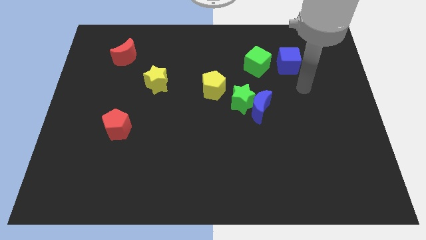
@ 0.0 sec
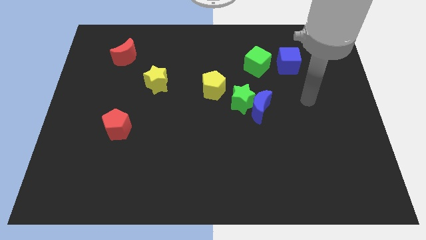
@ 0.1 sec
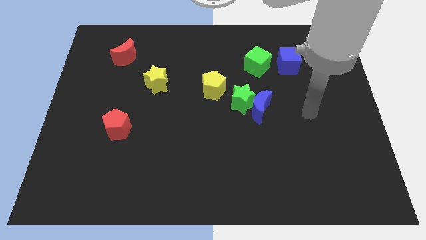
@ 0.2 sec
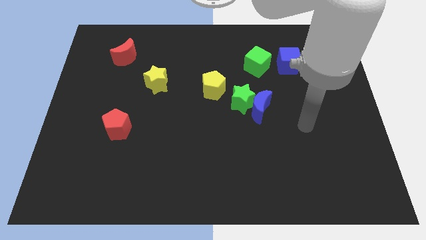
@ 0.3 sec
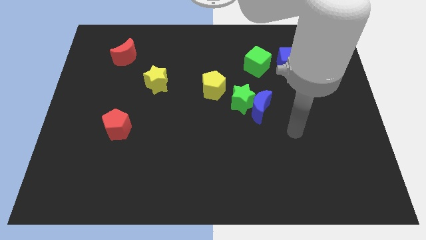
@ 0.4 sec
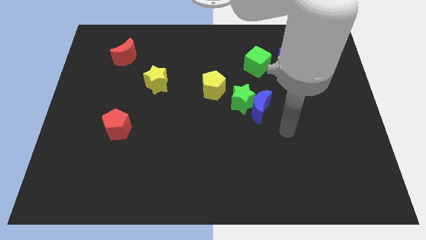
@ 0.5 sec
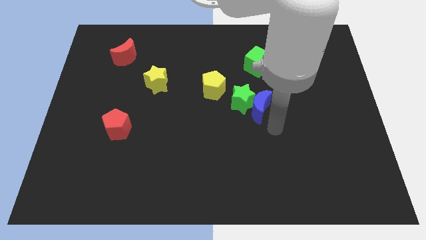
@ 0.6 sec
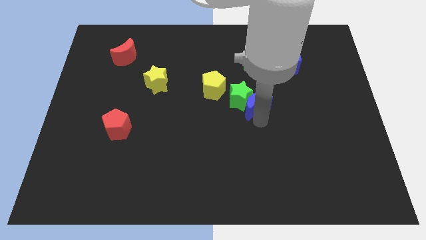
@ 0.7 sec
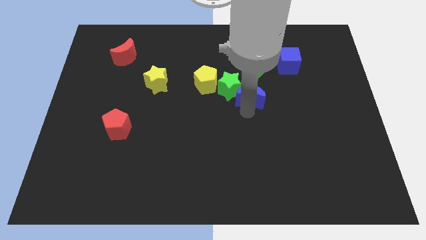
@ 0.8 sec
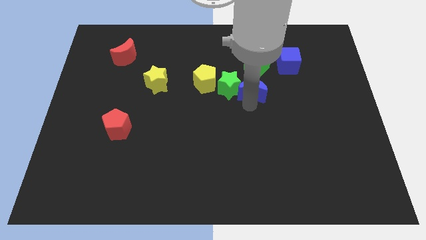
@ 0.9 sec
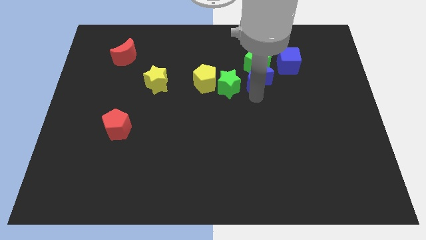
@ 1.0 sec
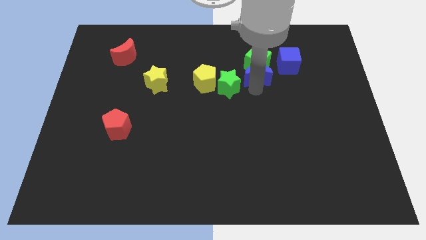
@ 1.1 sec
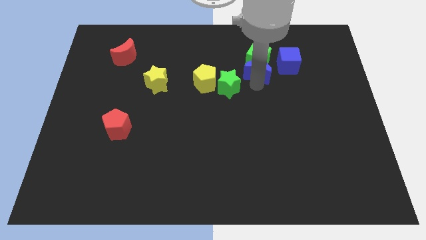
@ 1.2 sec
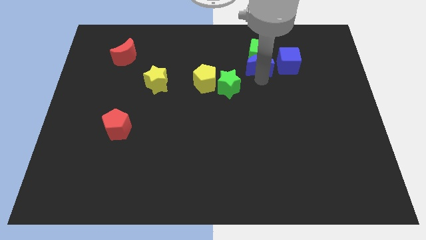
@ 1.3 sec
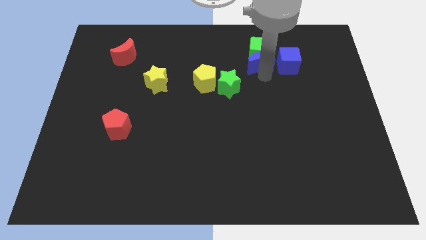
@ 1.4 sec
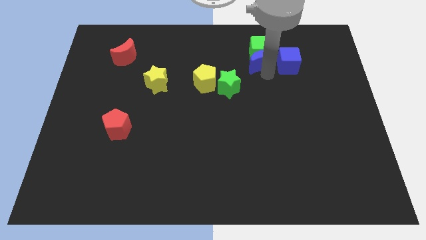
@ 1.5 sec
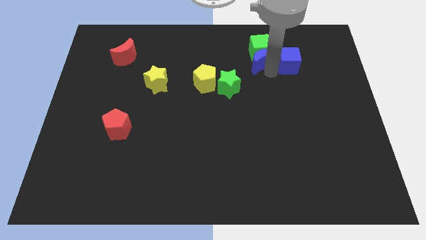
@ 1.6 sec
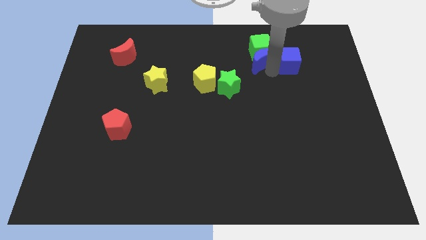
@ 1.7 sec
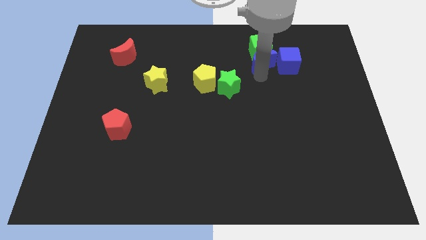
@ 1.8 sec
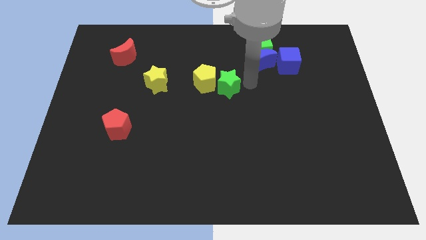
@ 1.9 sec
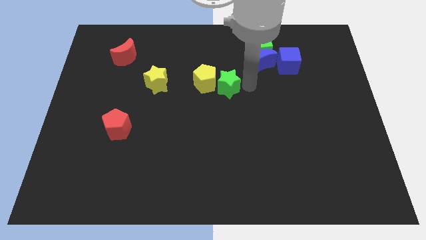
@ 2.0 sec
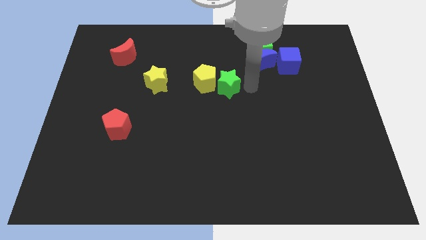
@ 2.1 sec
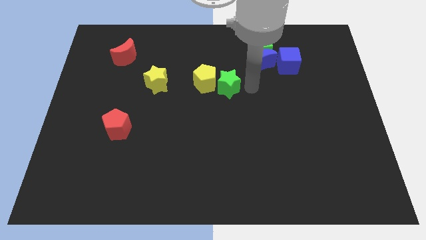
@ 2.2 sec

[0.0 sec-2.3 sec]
push the blue crescent to the left of the blue cube

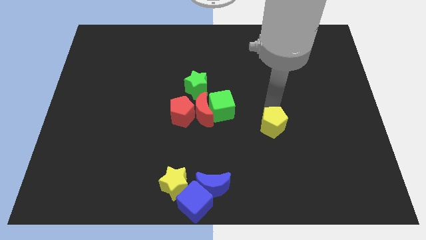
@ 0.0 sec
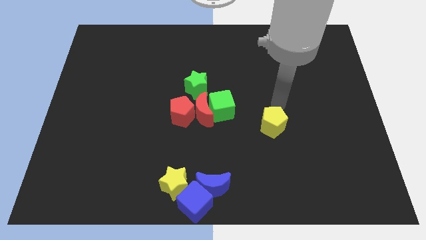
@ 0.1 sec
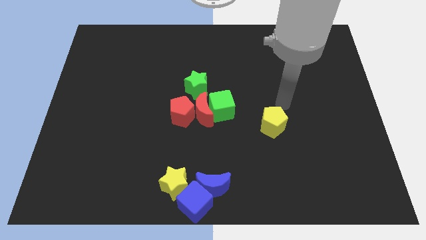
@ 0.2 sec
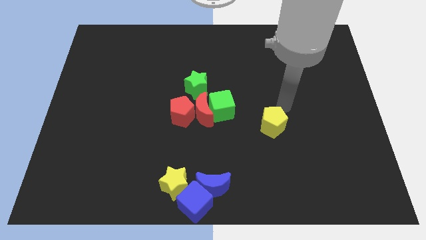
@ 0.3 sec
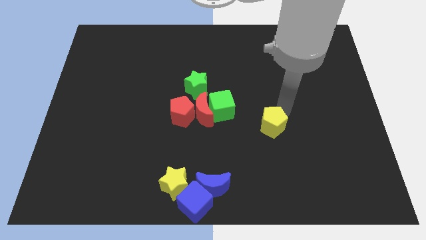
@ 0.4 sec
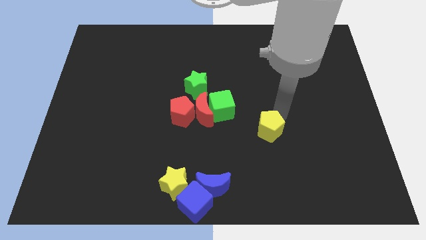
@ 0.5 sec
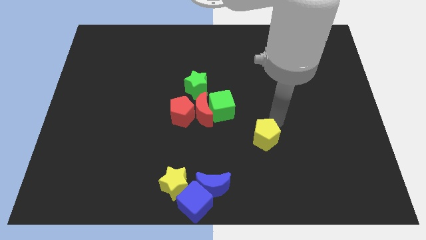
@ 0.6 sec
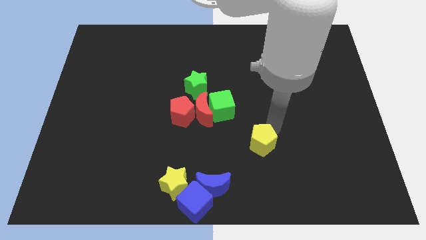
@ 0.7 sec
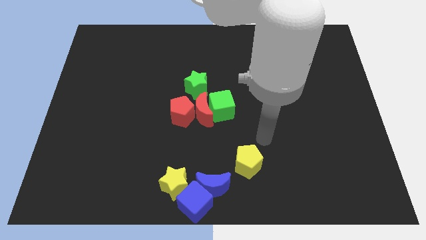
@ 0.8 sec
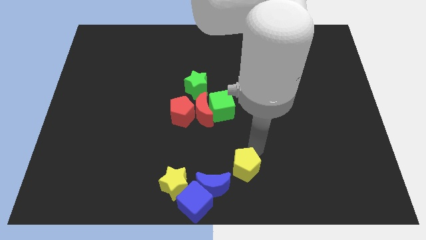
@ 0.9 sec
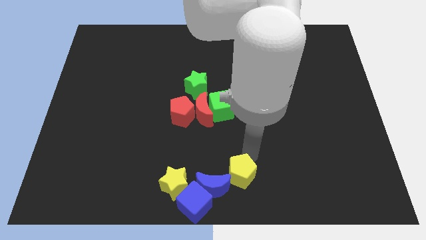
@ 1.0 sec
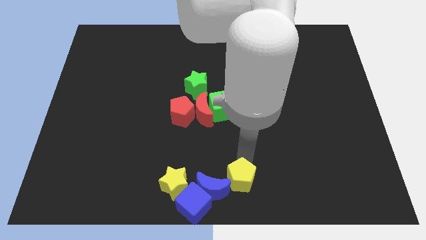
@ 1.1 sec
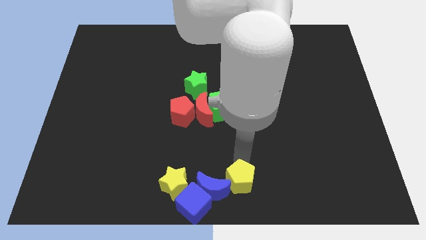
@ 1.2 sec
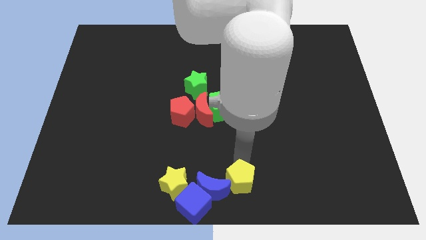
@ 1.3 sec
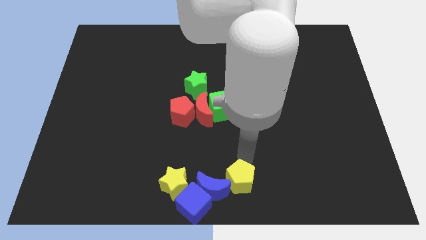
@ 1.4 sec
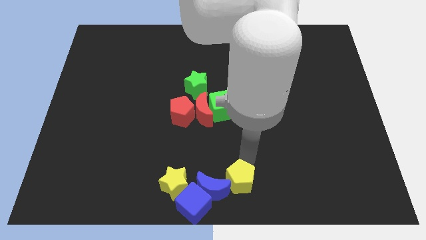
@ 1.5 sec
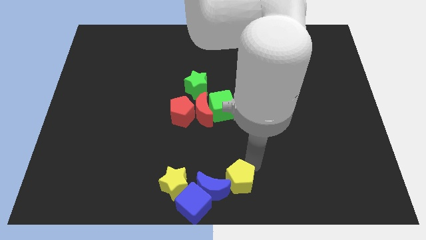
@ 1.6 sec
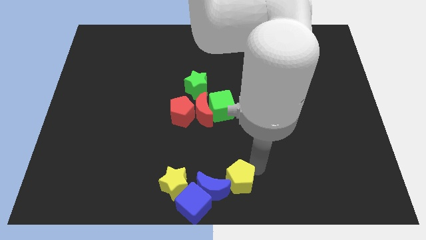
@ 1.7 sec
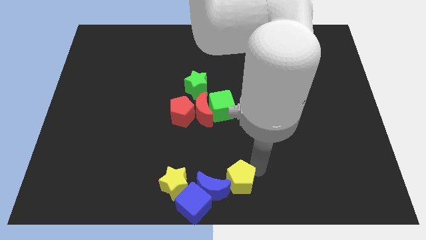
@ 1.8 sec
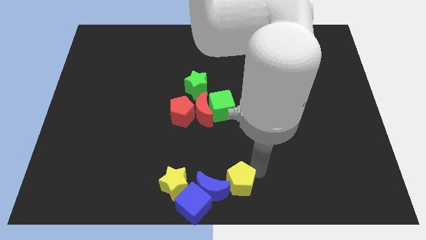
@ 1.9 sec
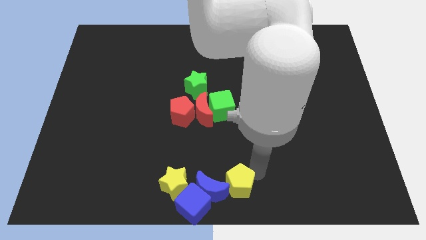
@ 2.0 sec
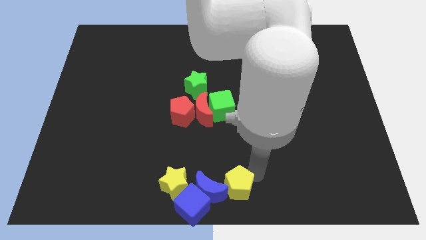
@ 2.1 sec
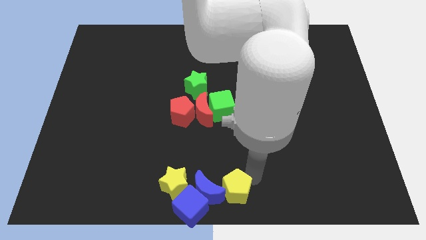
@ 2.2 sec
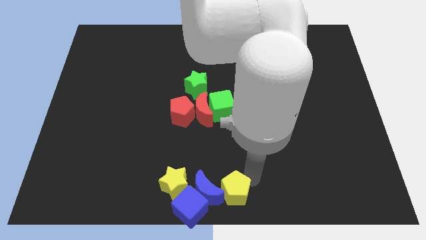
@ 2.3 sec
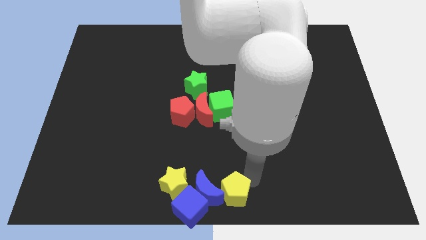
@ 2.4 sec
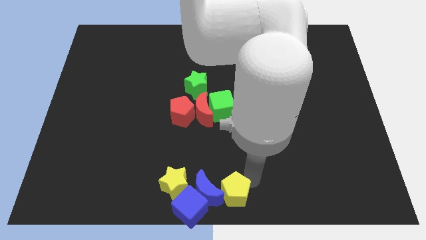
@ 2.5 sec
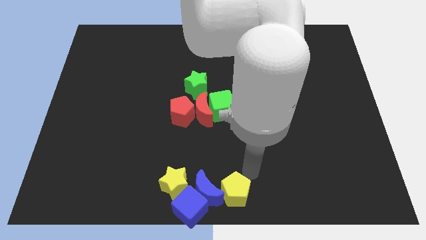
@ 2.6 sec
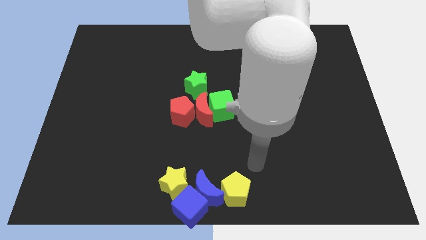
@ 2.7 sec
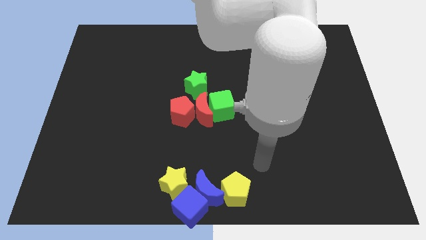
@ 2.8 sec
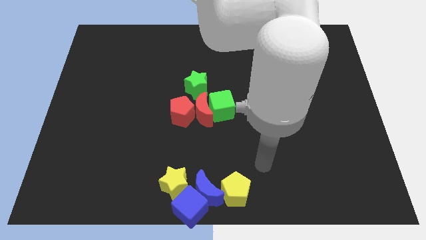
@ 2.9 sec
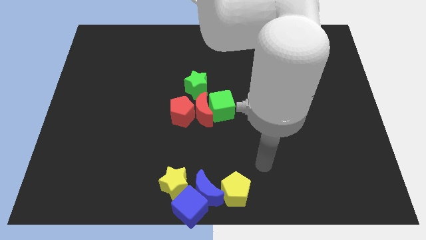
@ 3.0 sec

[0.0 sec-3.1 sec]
push the yellow pentagon to the right of the blue crescent

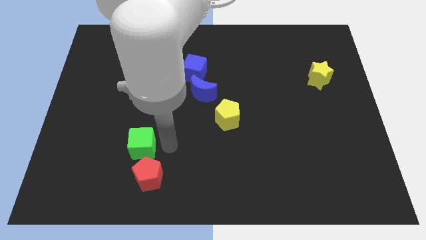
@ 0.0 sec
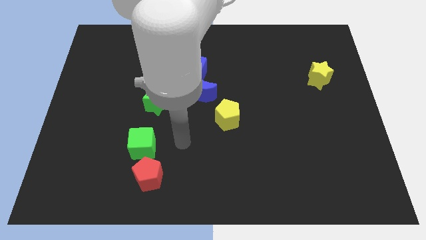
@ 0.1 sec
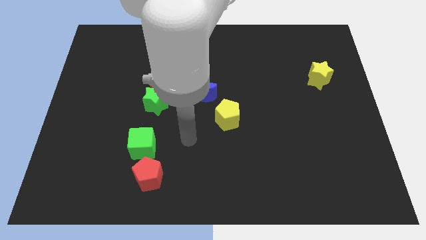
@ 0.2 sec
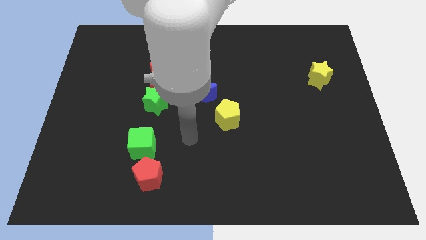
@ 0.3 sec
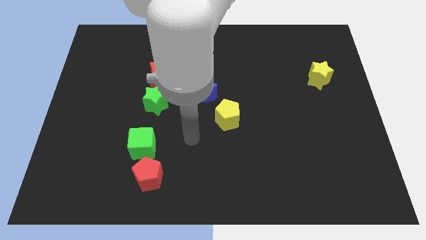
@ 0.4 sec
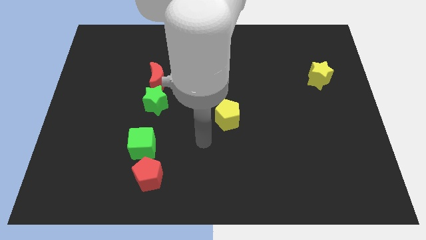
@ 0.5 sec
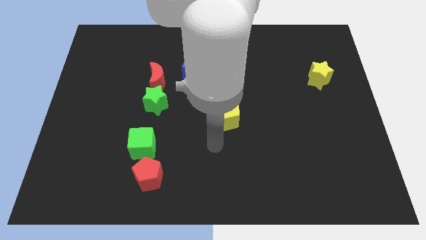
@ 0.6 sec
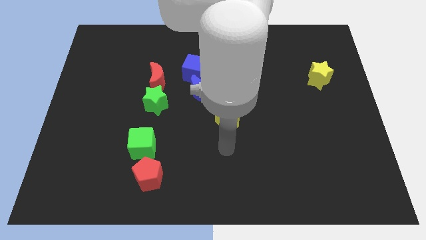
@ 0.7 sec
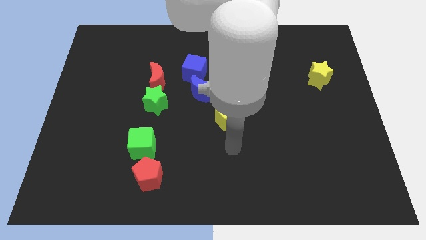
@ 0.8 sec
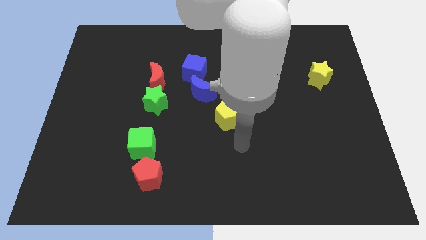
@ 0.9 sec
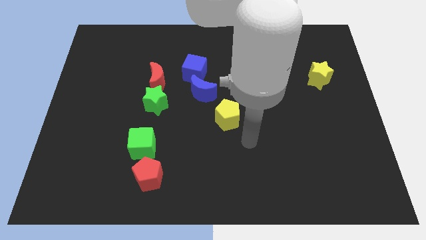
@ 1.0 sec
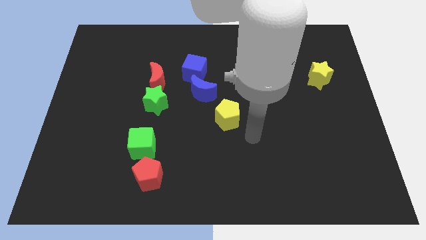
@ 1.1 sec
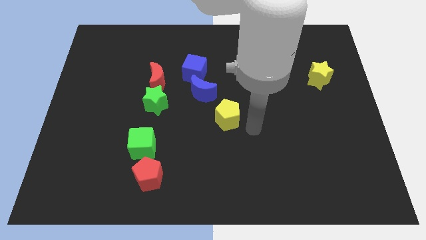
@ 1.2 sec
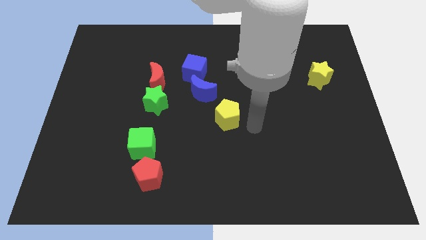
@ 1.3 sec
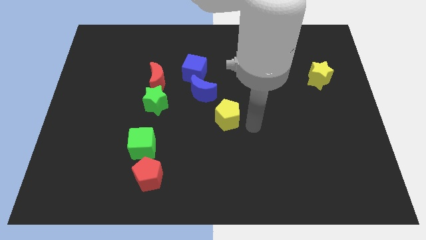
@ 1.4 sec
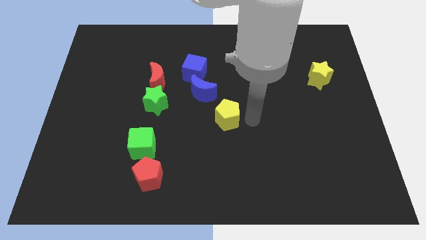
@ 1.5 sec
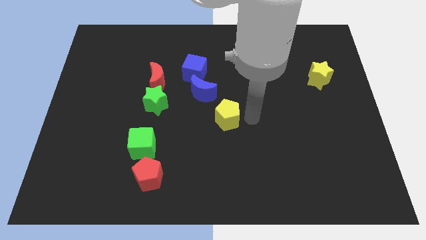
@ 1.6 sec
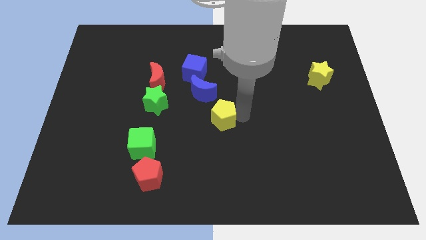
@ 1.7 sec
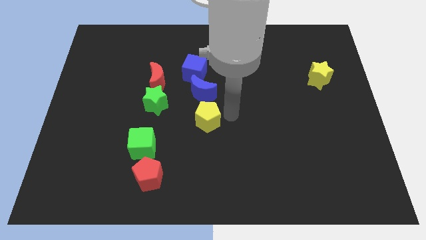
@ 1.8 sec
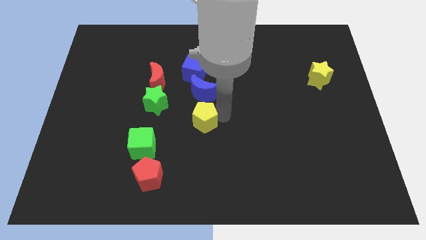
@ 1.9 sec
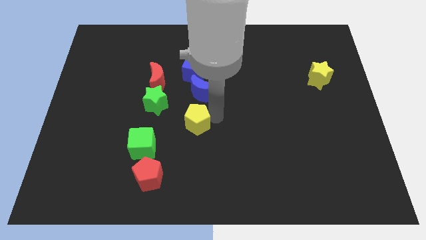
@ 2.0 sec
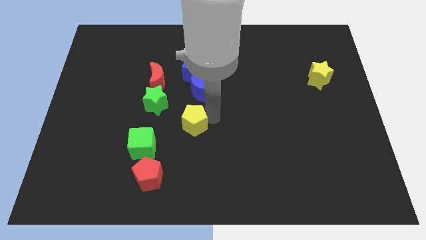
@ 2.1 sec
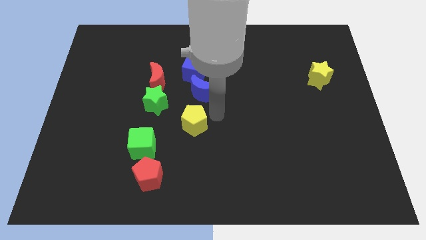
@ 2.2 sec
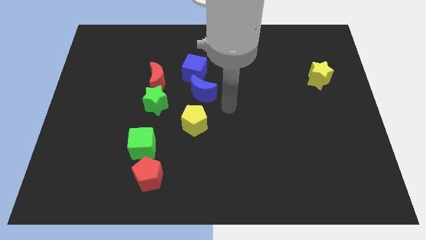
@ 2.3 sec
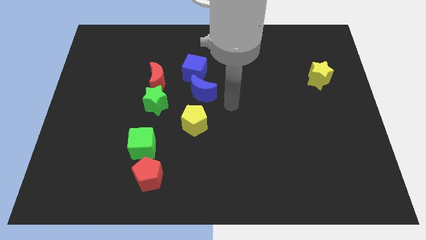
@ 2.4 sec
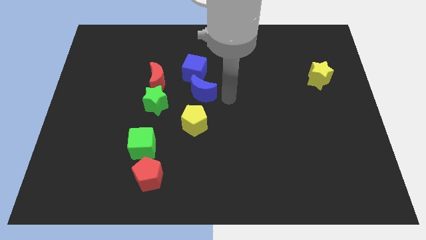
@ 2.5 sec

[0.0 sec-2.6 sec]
push the yellow pentagon below the blue moon

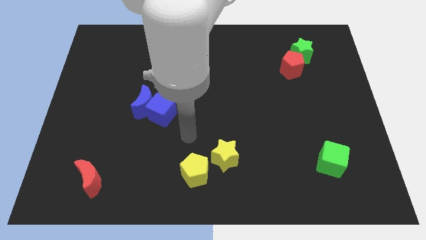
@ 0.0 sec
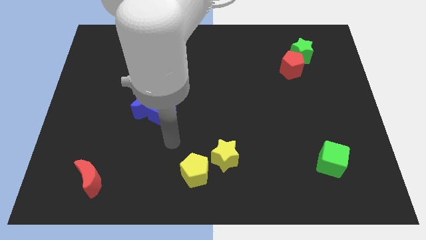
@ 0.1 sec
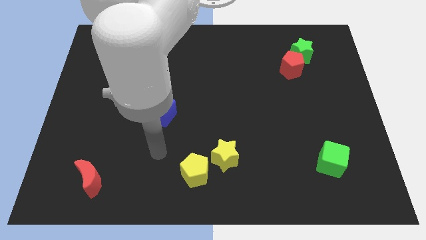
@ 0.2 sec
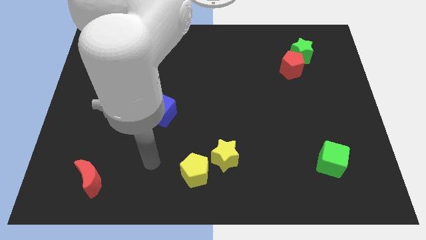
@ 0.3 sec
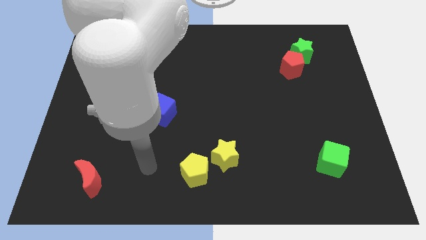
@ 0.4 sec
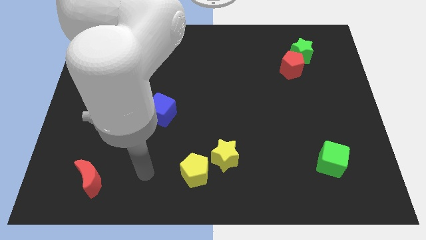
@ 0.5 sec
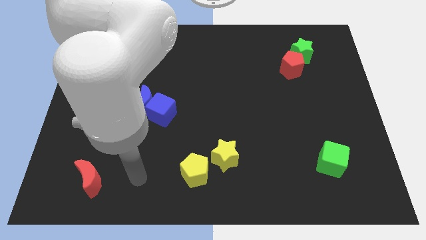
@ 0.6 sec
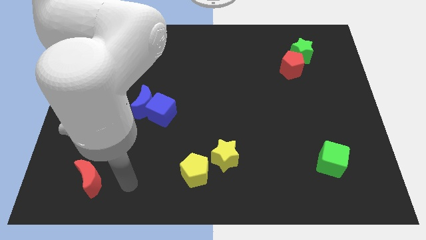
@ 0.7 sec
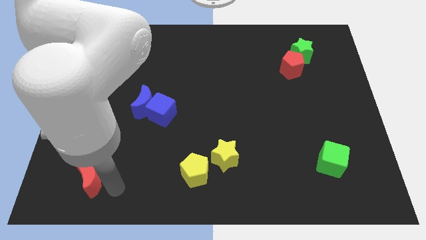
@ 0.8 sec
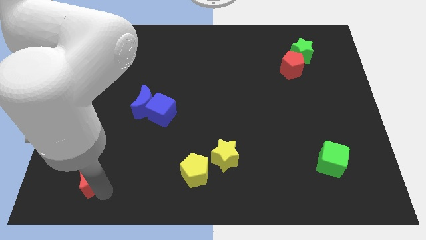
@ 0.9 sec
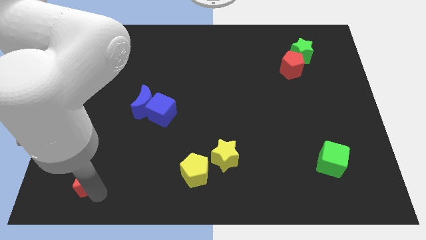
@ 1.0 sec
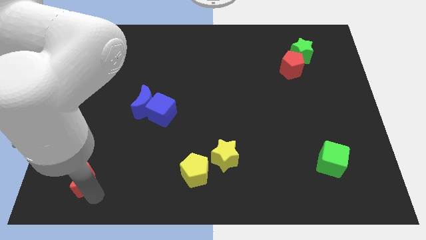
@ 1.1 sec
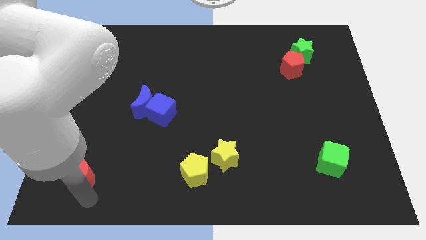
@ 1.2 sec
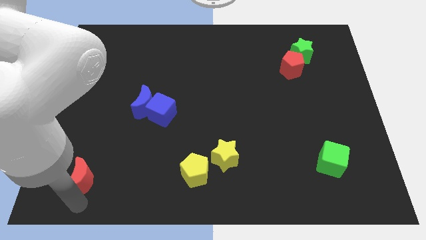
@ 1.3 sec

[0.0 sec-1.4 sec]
slide the red crescent slightly to the left side
